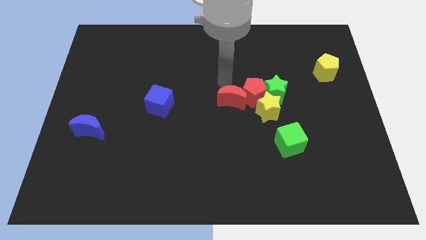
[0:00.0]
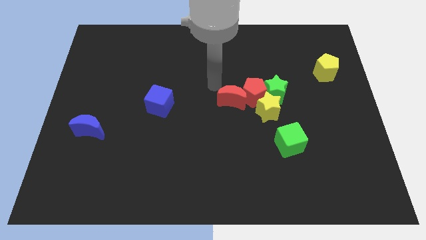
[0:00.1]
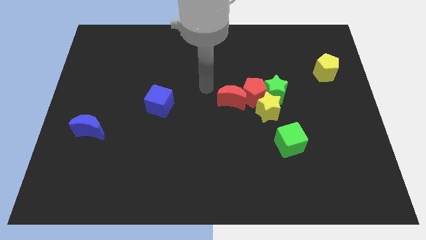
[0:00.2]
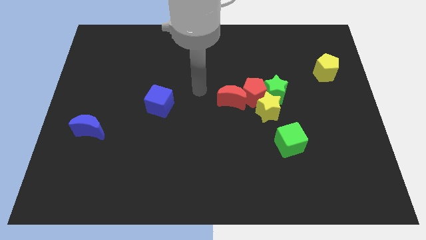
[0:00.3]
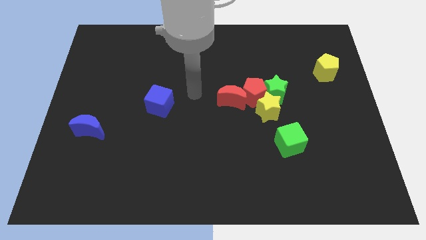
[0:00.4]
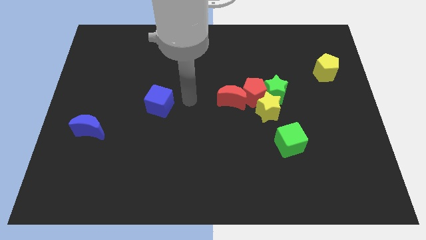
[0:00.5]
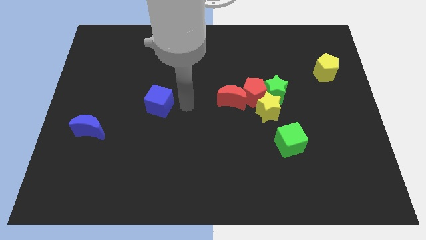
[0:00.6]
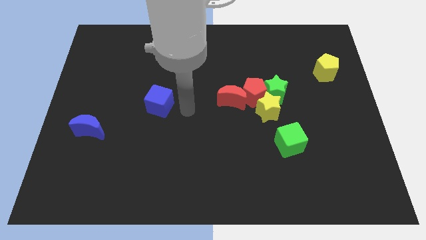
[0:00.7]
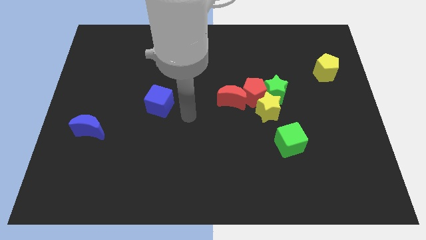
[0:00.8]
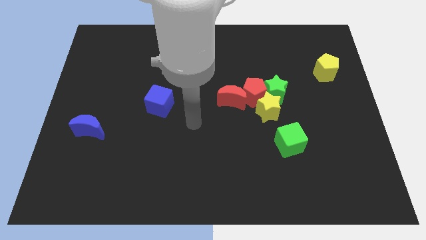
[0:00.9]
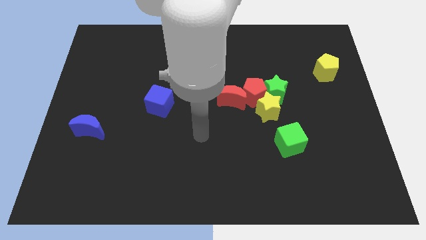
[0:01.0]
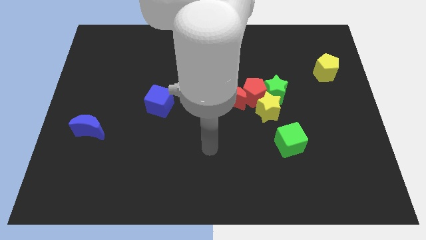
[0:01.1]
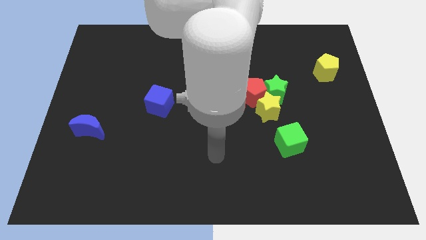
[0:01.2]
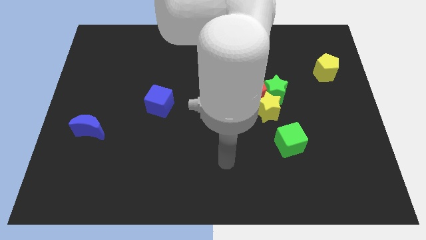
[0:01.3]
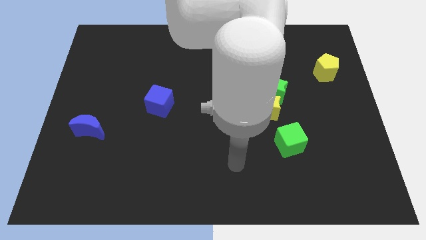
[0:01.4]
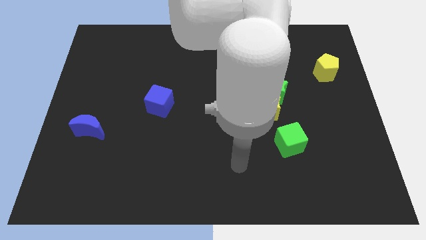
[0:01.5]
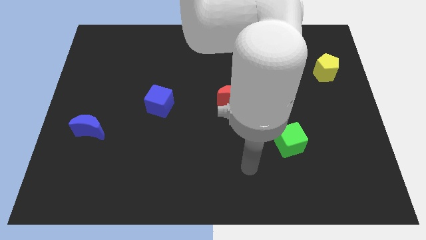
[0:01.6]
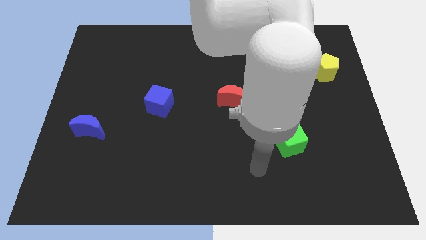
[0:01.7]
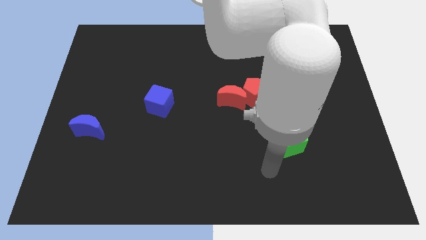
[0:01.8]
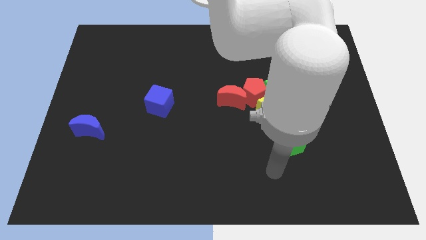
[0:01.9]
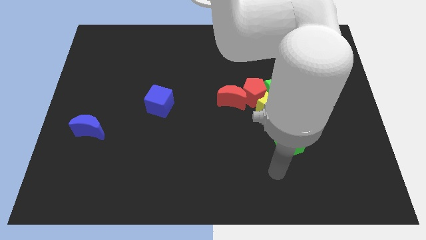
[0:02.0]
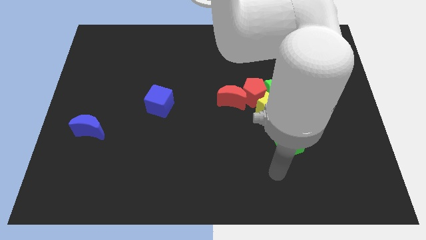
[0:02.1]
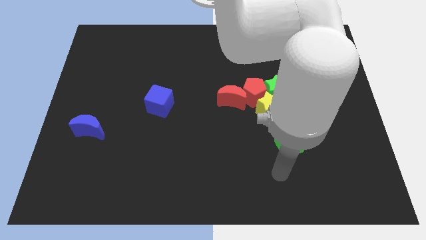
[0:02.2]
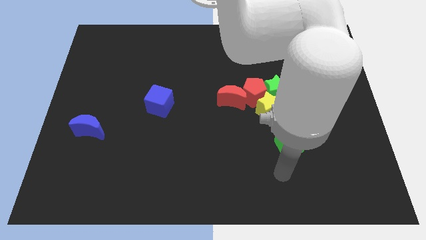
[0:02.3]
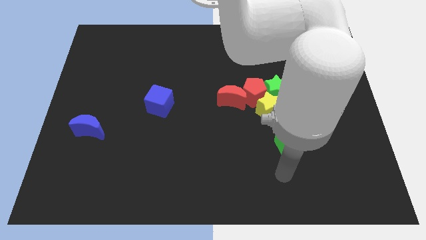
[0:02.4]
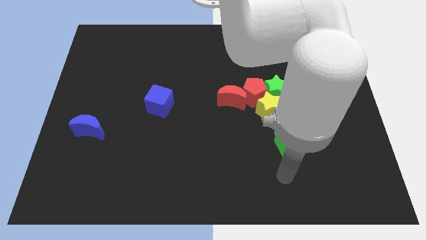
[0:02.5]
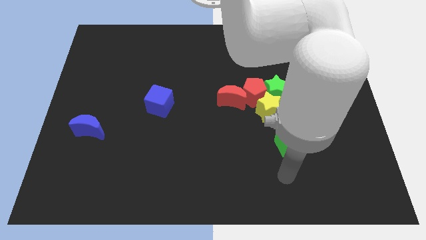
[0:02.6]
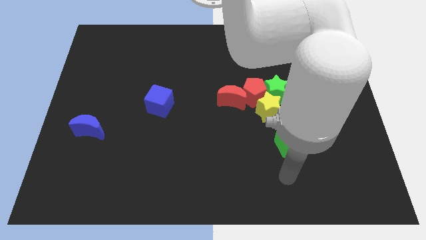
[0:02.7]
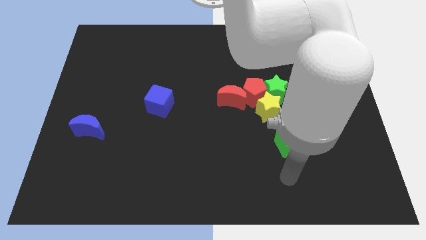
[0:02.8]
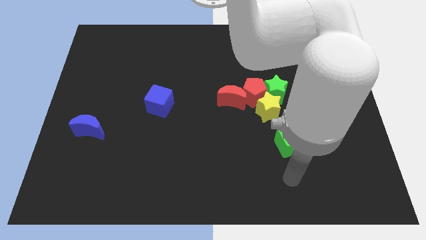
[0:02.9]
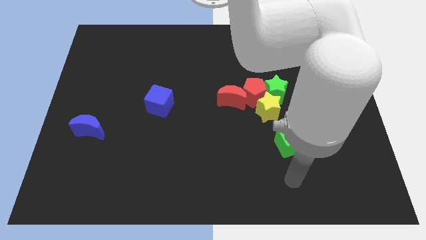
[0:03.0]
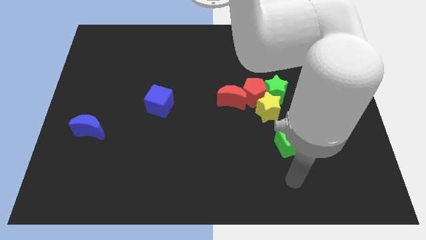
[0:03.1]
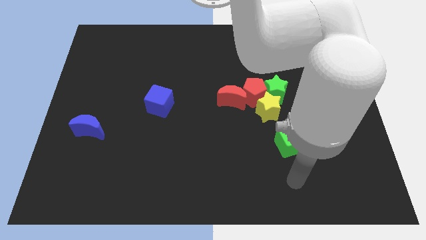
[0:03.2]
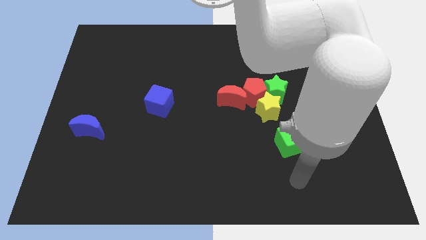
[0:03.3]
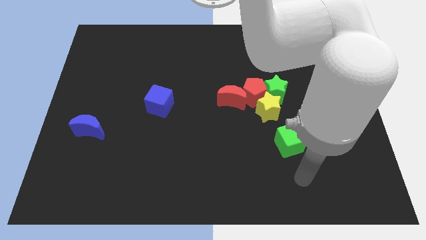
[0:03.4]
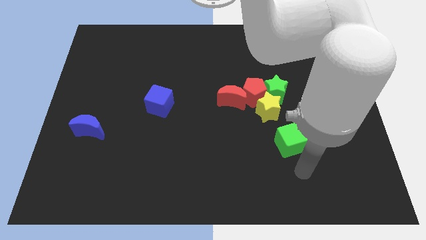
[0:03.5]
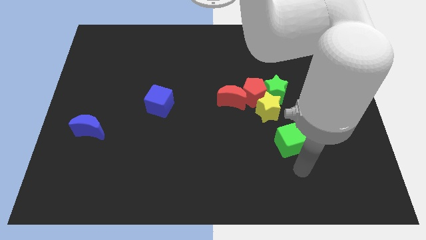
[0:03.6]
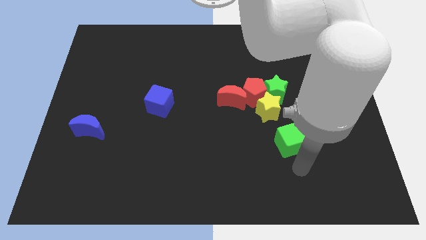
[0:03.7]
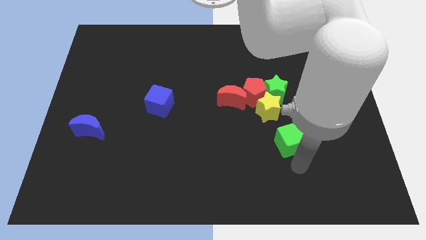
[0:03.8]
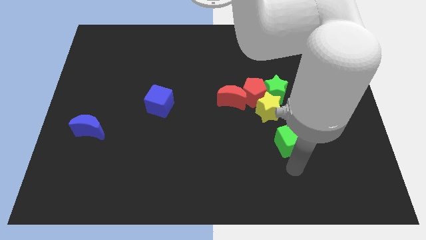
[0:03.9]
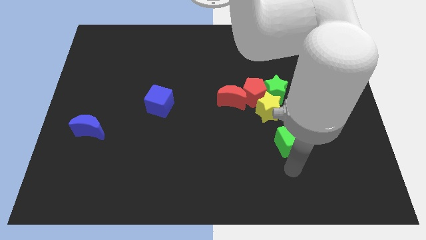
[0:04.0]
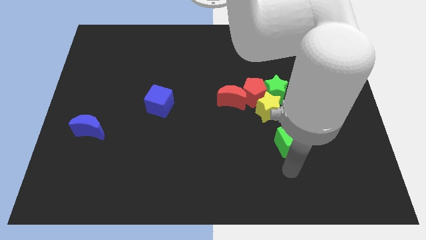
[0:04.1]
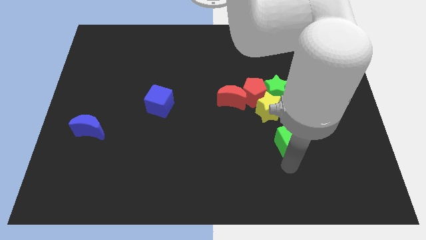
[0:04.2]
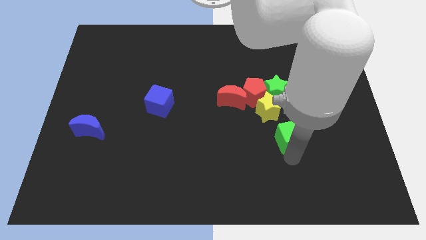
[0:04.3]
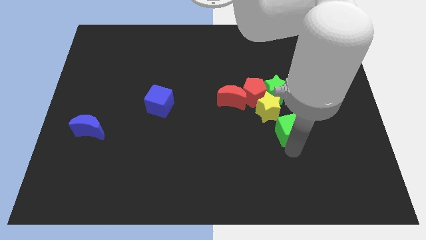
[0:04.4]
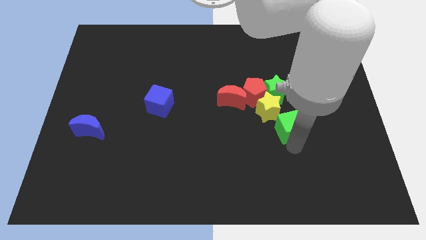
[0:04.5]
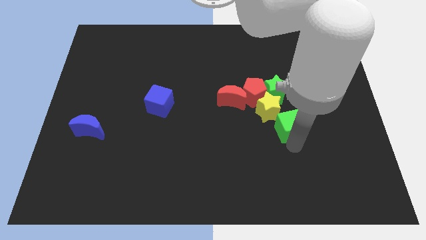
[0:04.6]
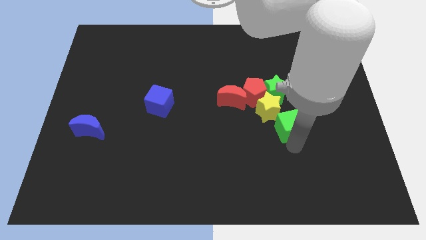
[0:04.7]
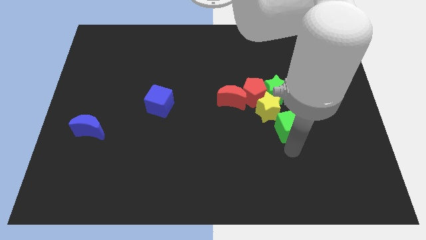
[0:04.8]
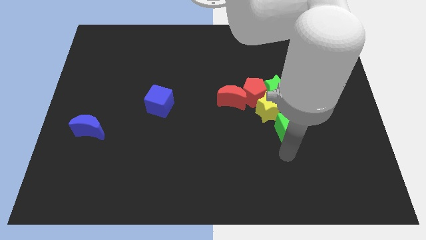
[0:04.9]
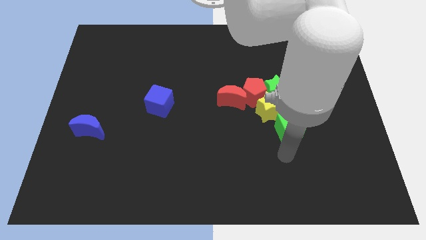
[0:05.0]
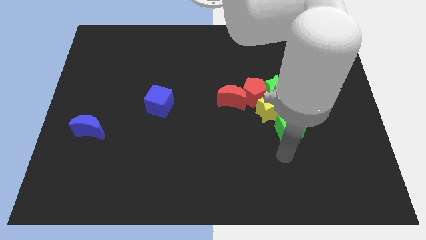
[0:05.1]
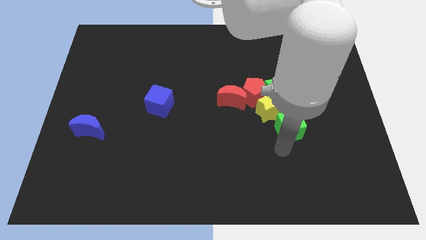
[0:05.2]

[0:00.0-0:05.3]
move the green cube slightly up

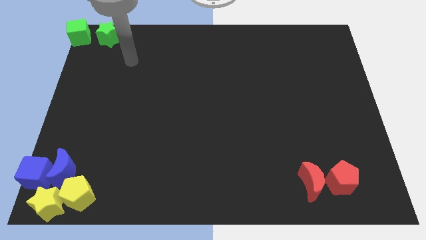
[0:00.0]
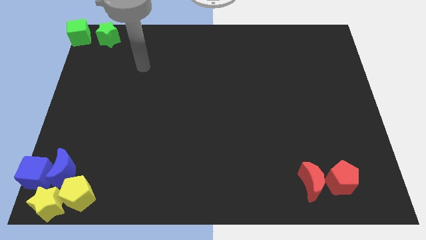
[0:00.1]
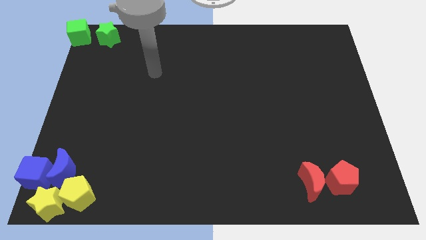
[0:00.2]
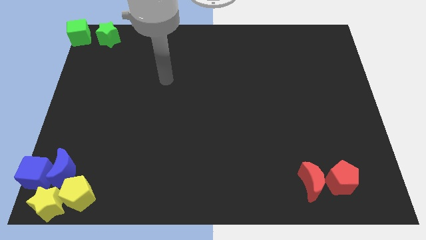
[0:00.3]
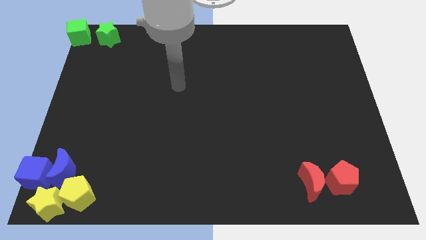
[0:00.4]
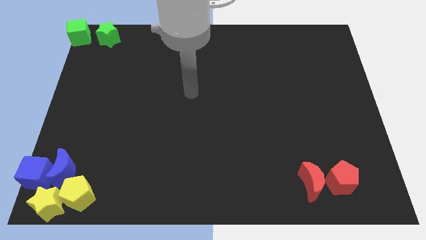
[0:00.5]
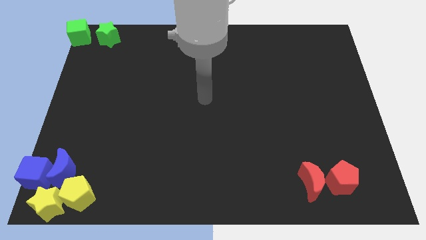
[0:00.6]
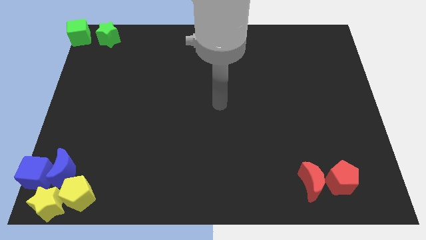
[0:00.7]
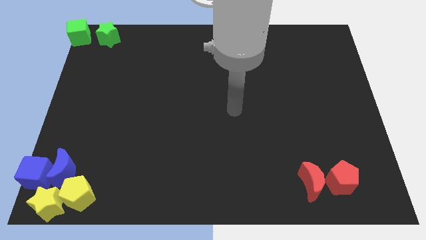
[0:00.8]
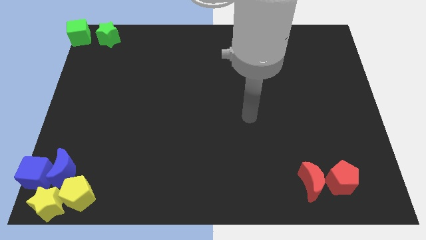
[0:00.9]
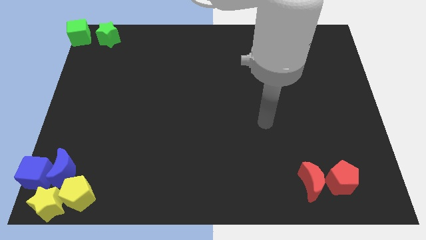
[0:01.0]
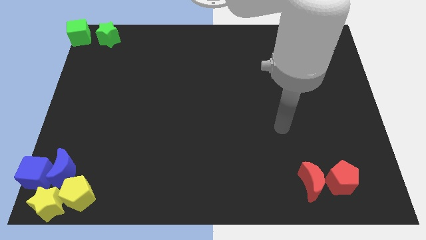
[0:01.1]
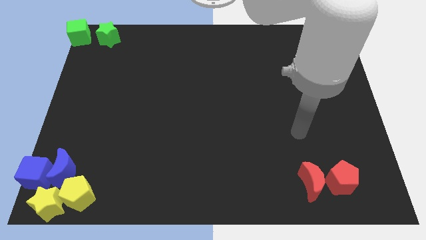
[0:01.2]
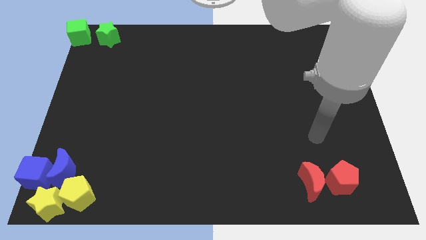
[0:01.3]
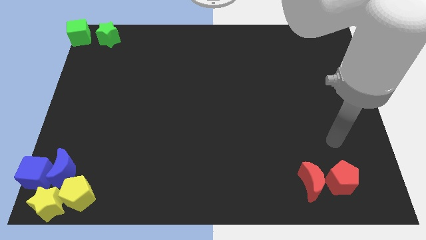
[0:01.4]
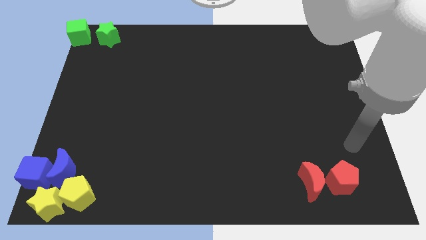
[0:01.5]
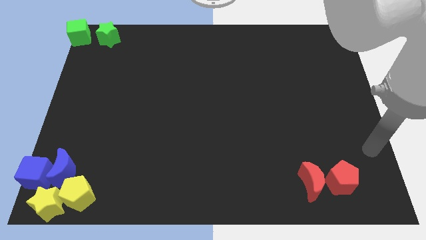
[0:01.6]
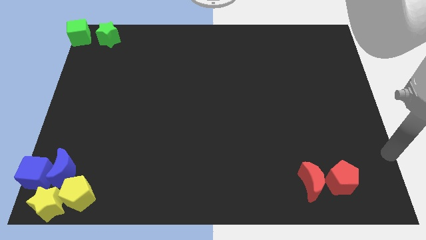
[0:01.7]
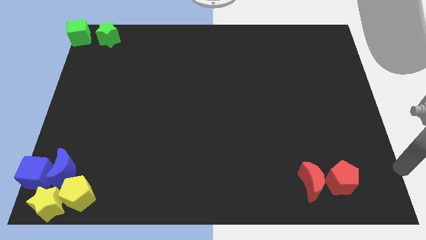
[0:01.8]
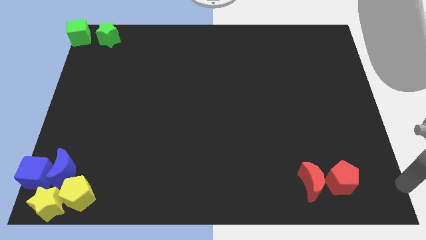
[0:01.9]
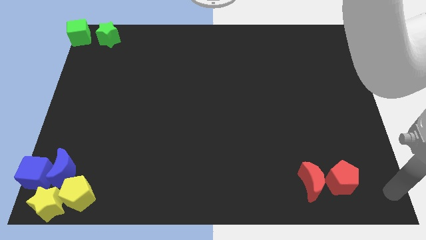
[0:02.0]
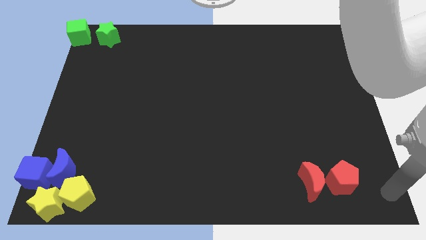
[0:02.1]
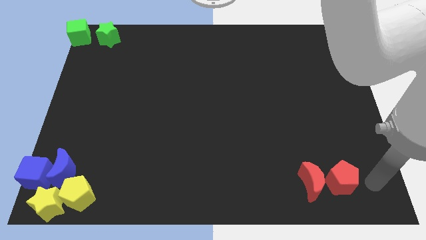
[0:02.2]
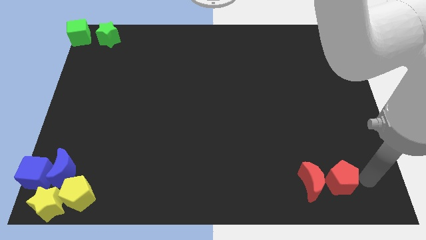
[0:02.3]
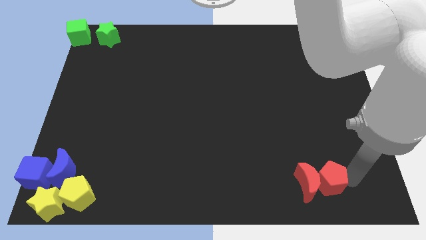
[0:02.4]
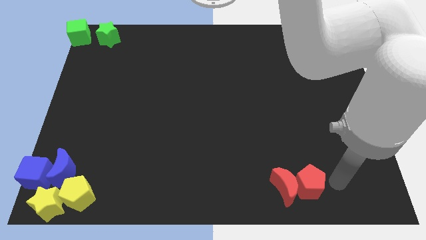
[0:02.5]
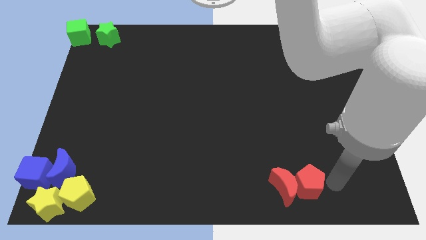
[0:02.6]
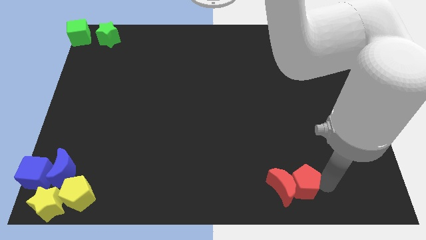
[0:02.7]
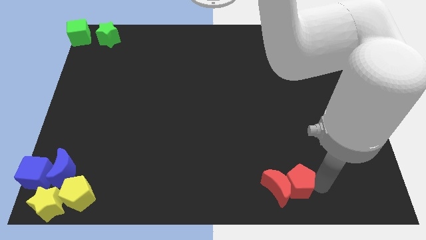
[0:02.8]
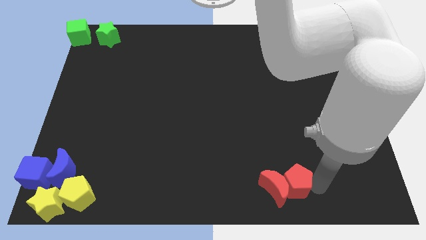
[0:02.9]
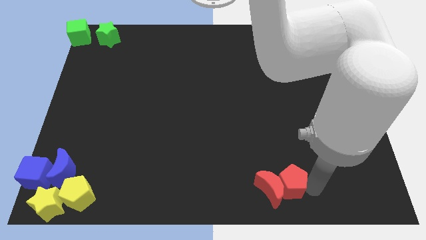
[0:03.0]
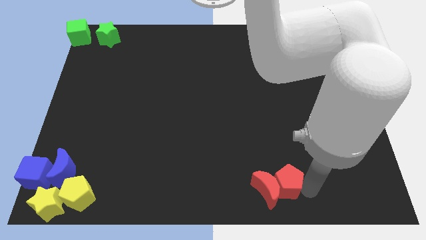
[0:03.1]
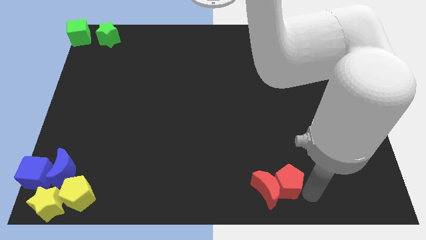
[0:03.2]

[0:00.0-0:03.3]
move the red blocks slightly to the right side of the table

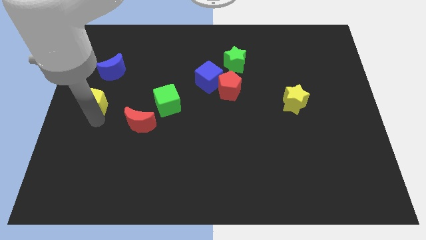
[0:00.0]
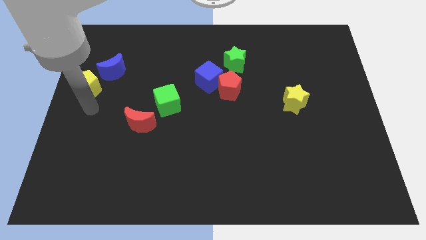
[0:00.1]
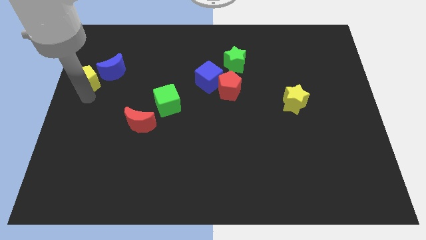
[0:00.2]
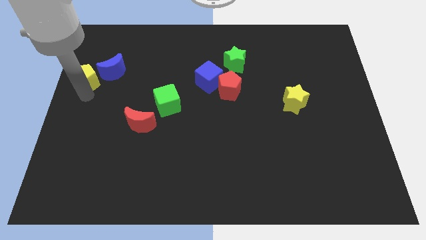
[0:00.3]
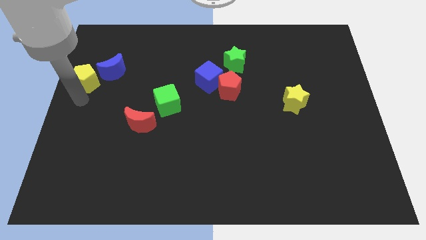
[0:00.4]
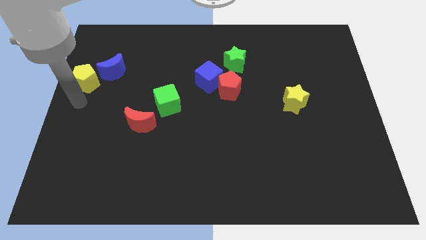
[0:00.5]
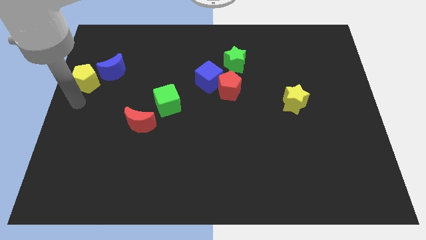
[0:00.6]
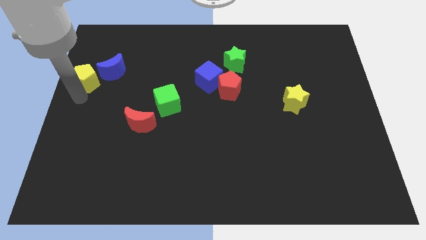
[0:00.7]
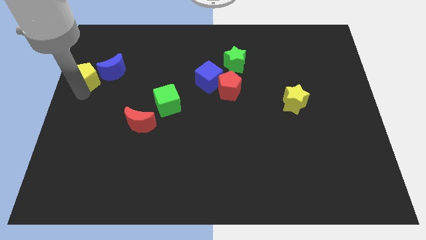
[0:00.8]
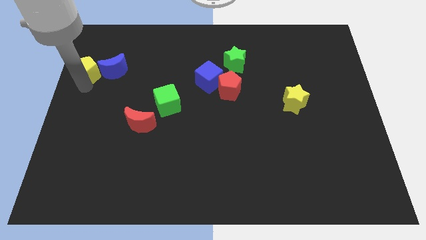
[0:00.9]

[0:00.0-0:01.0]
move yellow pentagon bottom left to blue crescent
